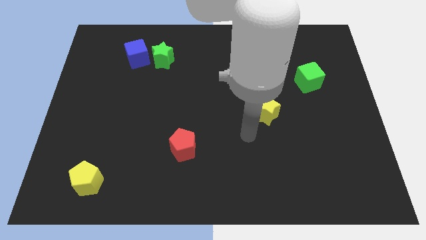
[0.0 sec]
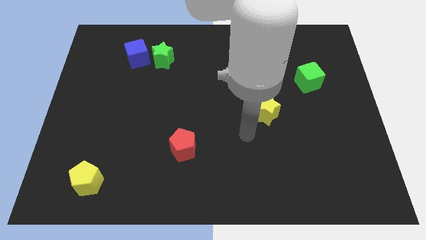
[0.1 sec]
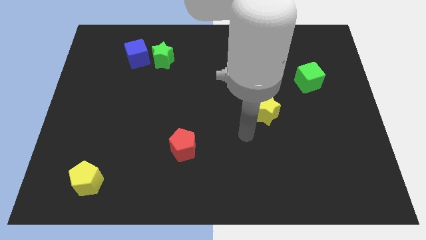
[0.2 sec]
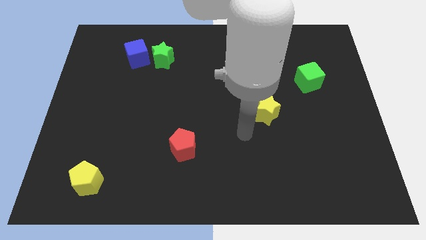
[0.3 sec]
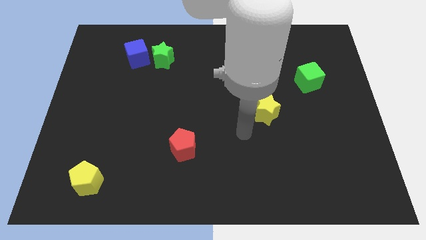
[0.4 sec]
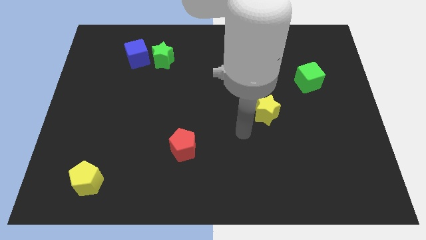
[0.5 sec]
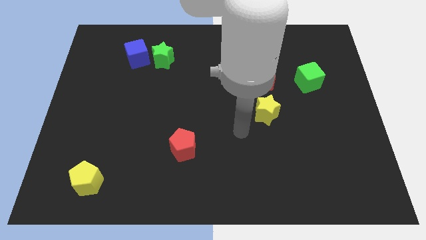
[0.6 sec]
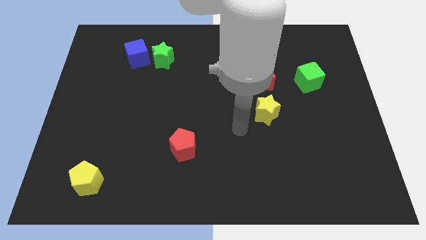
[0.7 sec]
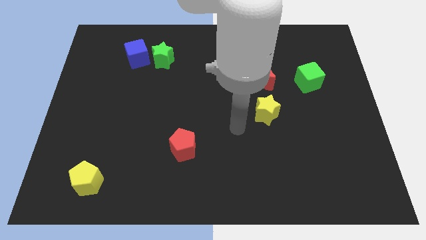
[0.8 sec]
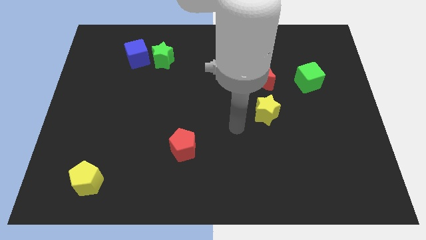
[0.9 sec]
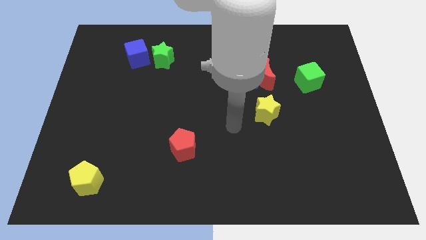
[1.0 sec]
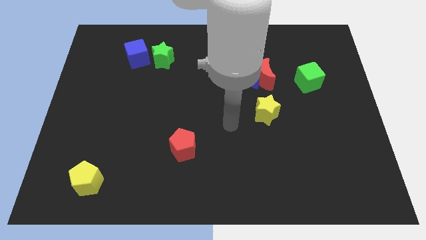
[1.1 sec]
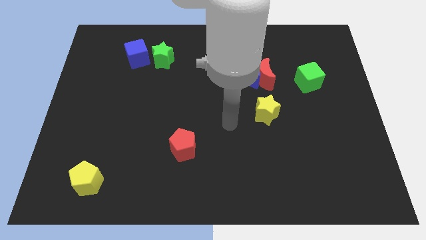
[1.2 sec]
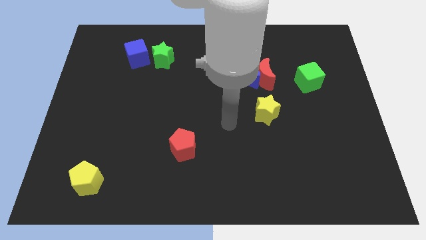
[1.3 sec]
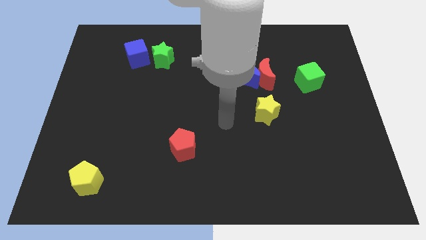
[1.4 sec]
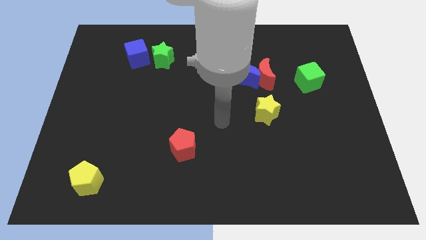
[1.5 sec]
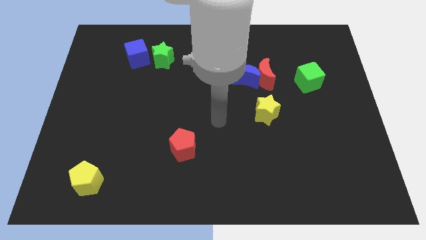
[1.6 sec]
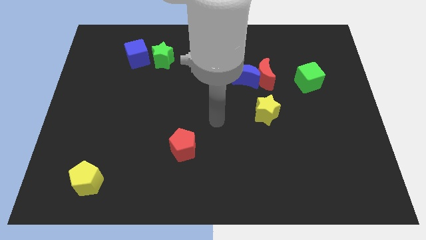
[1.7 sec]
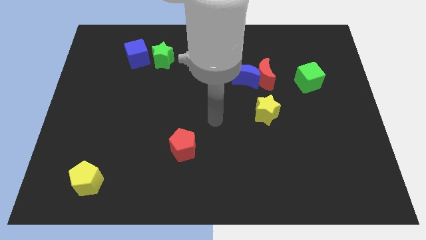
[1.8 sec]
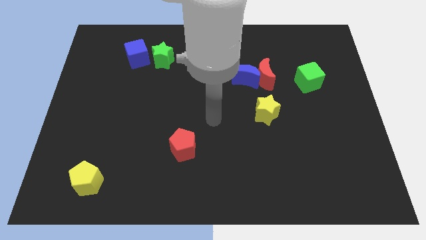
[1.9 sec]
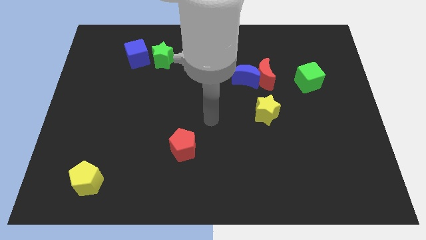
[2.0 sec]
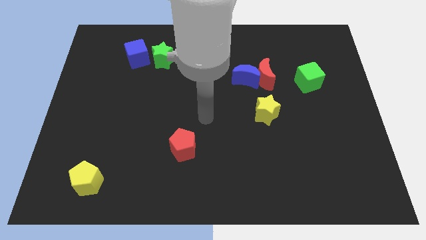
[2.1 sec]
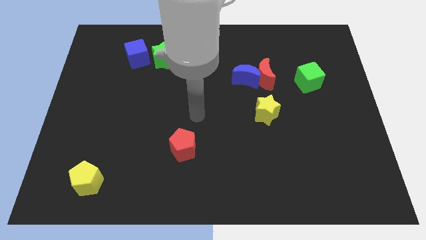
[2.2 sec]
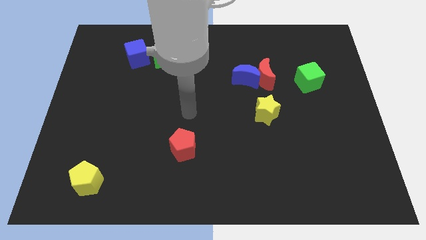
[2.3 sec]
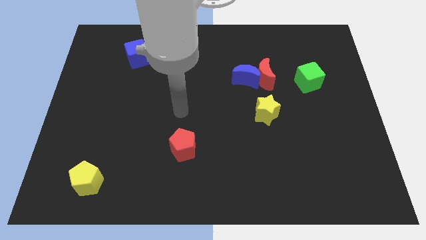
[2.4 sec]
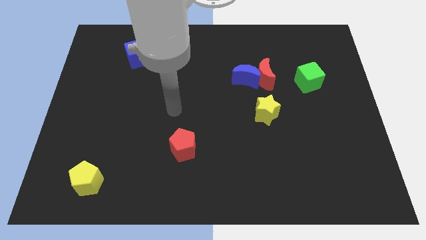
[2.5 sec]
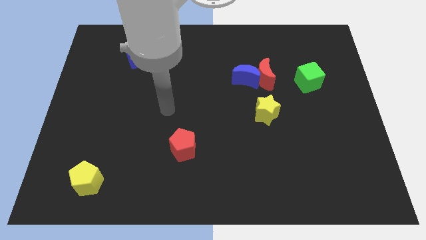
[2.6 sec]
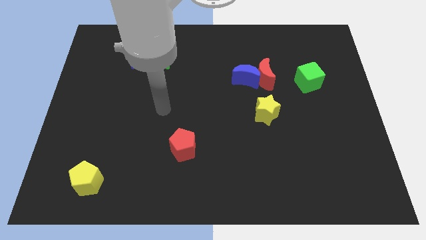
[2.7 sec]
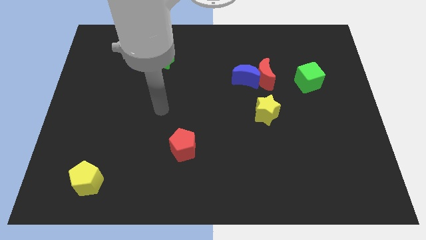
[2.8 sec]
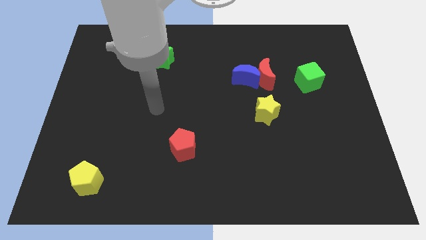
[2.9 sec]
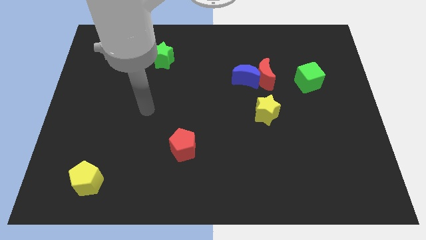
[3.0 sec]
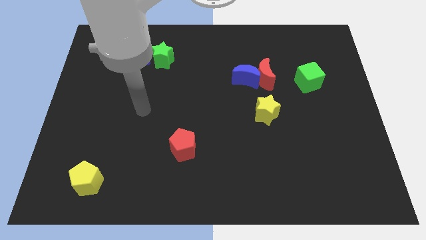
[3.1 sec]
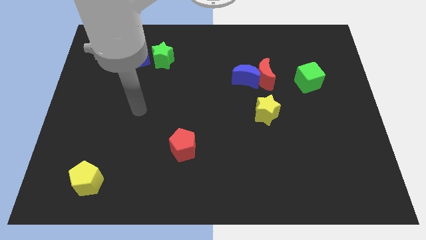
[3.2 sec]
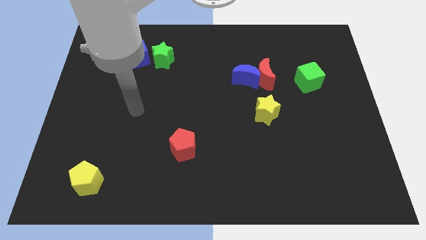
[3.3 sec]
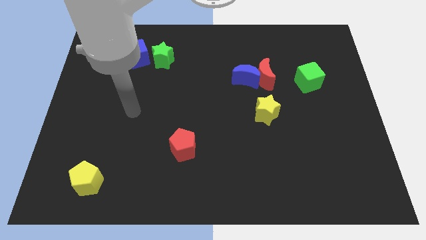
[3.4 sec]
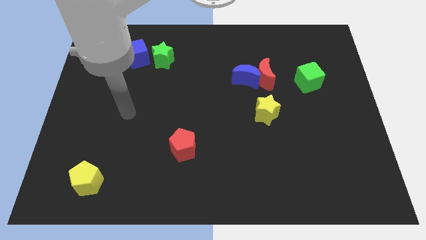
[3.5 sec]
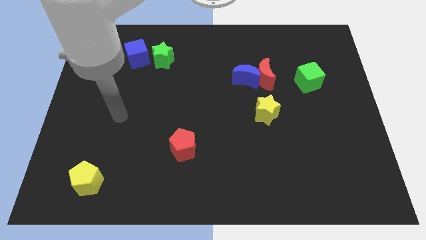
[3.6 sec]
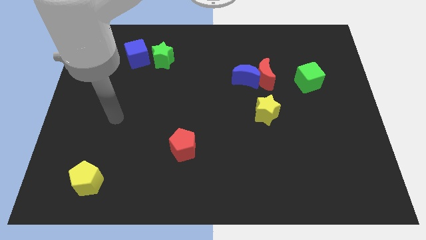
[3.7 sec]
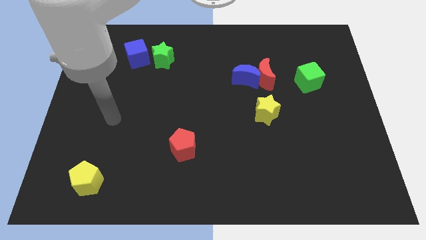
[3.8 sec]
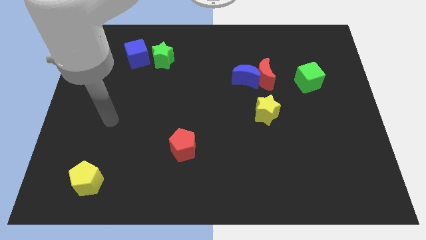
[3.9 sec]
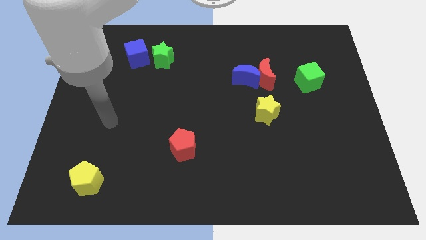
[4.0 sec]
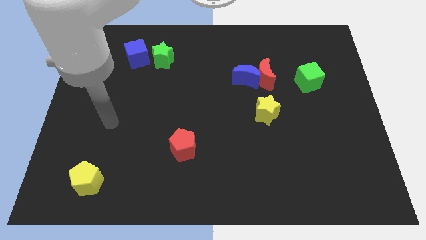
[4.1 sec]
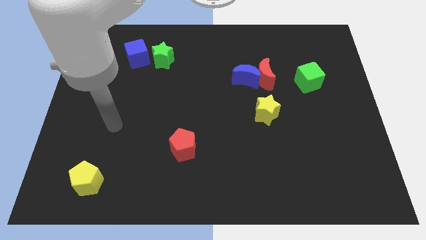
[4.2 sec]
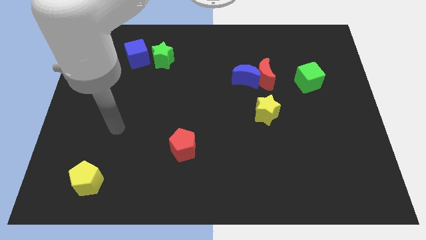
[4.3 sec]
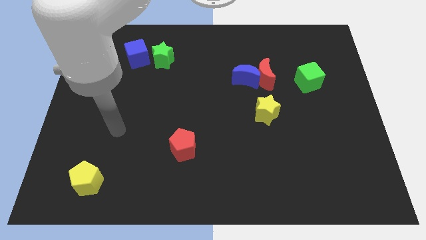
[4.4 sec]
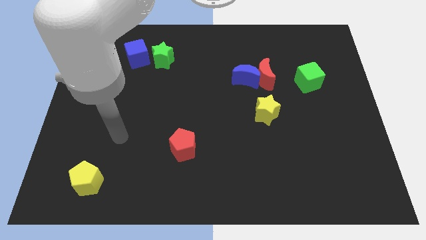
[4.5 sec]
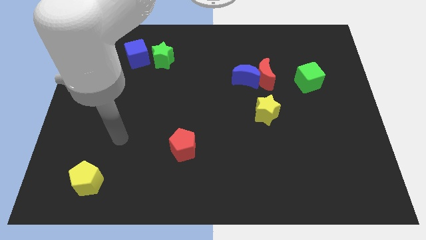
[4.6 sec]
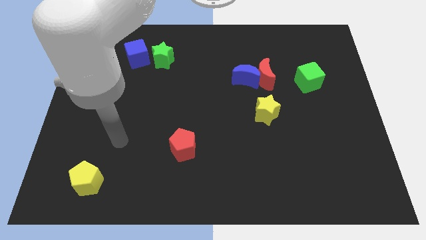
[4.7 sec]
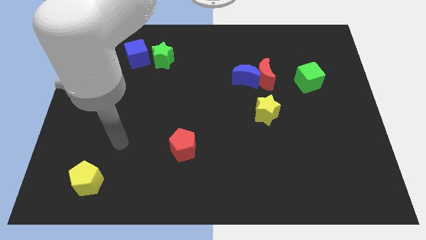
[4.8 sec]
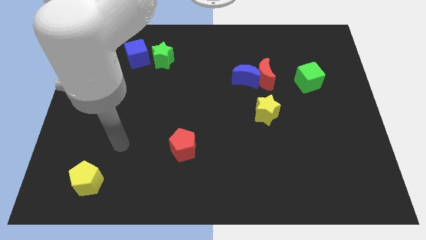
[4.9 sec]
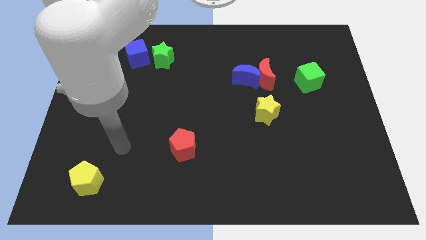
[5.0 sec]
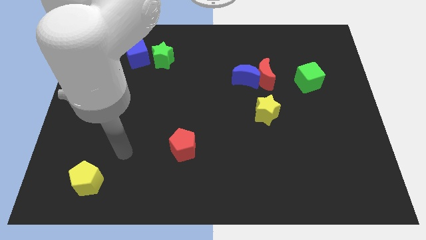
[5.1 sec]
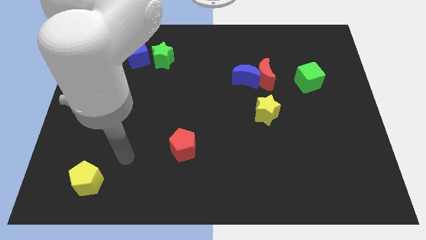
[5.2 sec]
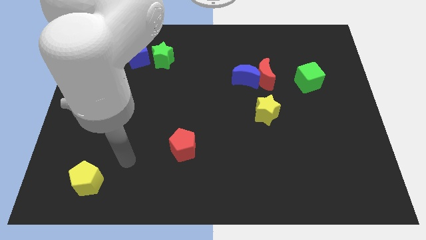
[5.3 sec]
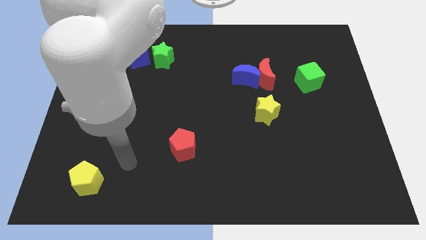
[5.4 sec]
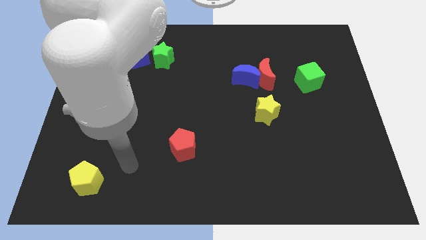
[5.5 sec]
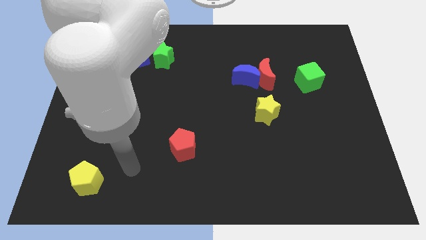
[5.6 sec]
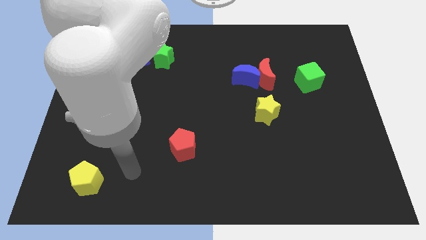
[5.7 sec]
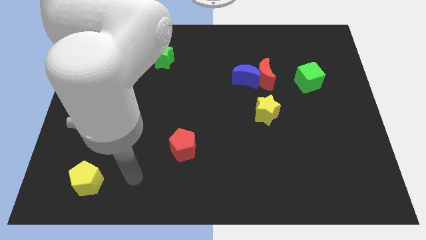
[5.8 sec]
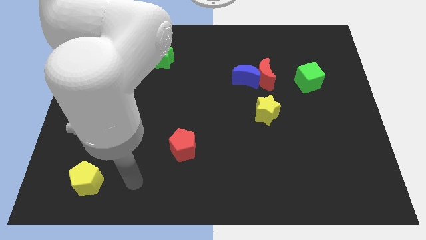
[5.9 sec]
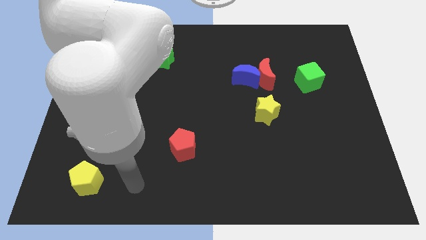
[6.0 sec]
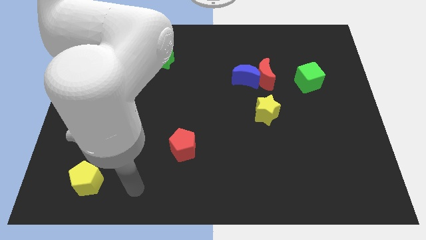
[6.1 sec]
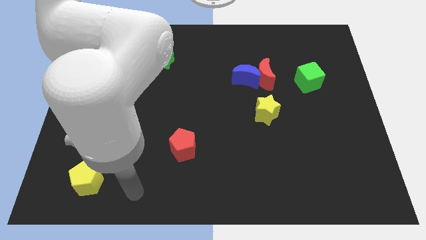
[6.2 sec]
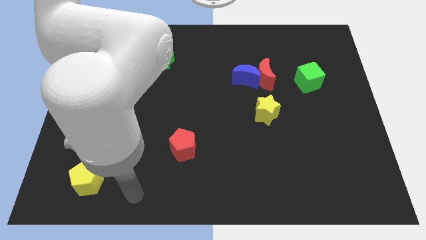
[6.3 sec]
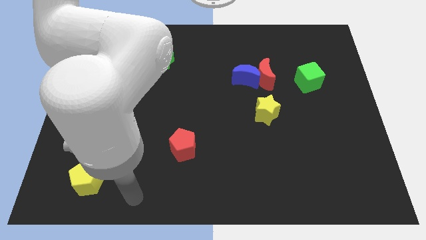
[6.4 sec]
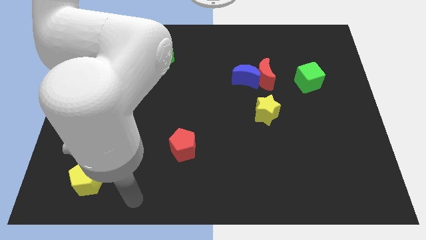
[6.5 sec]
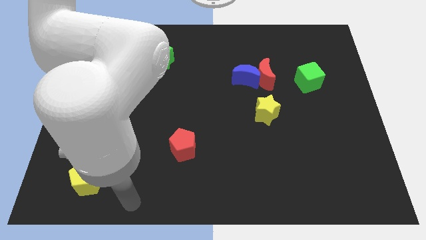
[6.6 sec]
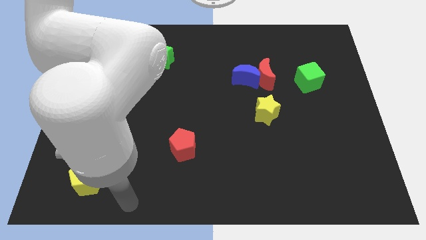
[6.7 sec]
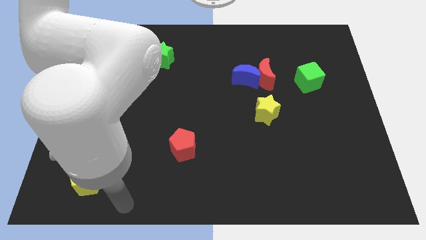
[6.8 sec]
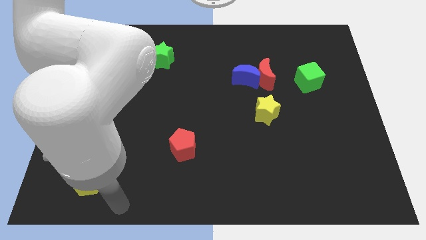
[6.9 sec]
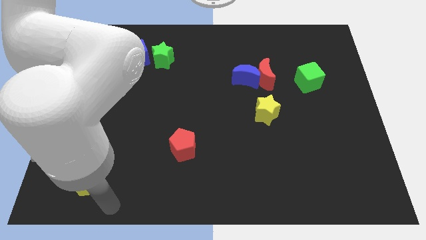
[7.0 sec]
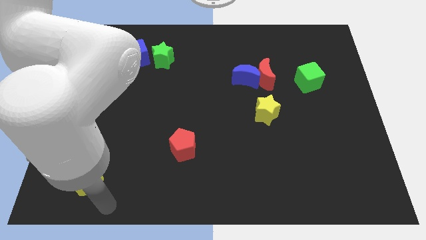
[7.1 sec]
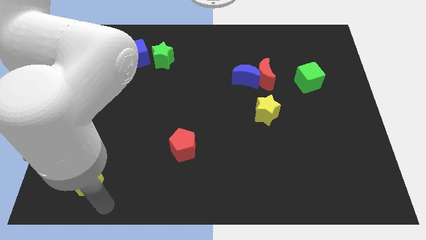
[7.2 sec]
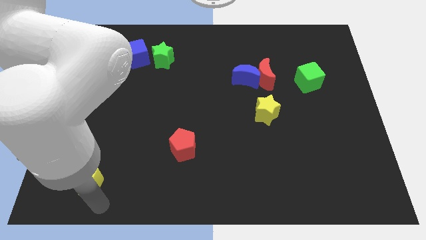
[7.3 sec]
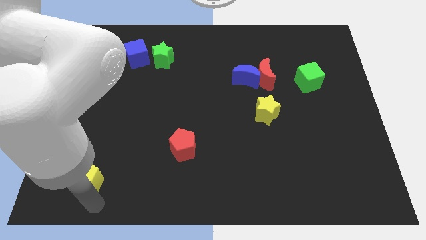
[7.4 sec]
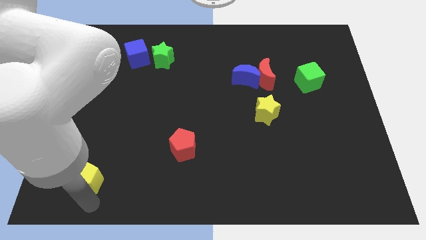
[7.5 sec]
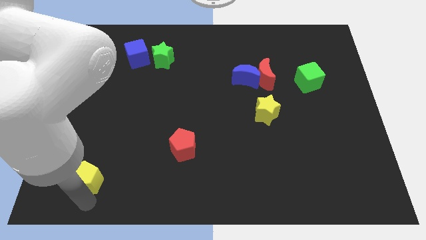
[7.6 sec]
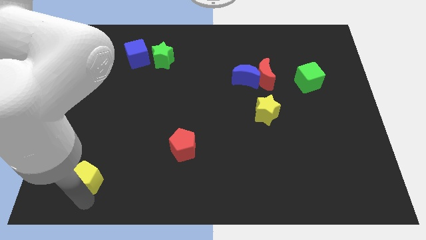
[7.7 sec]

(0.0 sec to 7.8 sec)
point the arm at the bottom side of the yellow pentagon

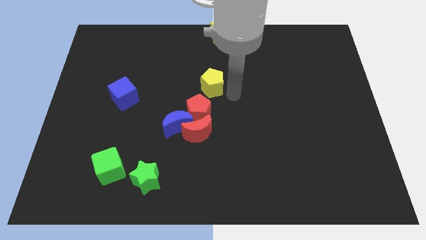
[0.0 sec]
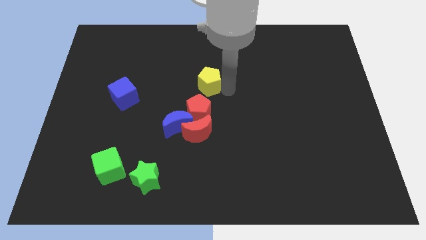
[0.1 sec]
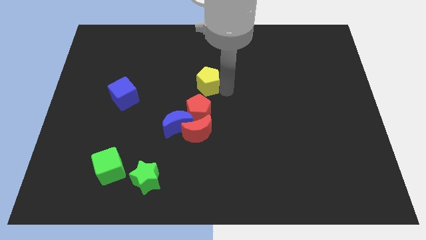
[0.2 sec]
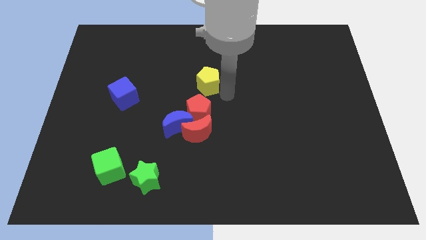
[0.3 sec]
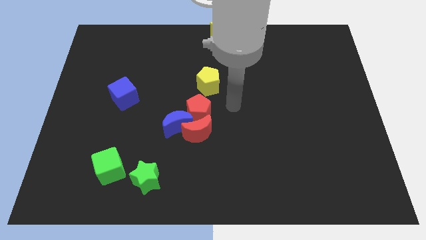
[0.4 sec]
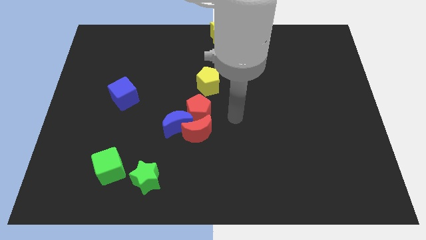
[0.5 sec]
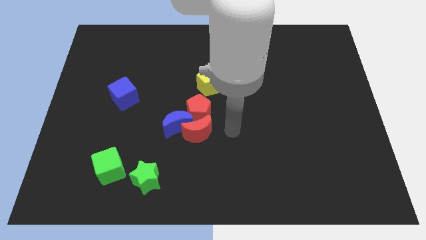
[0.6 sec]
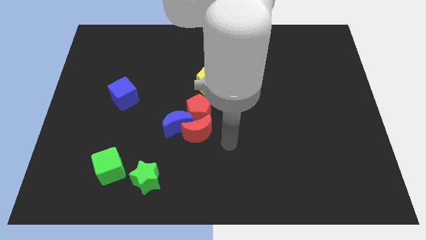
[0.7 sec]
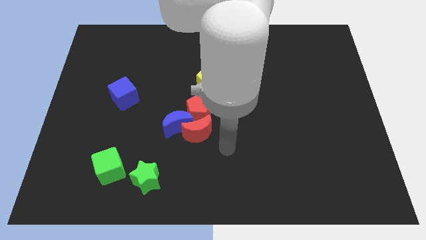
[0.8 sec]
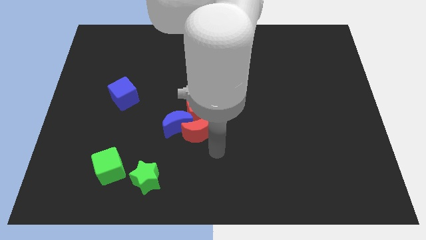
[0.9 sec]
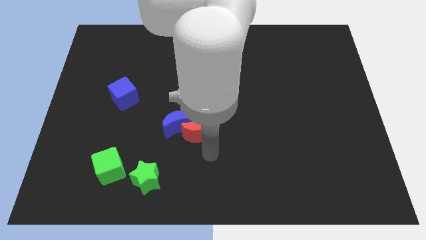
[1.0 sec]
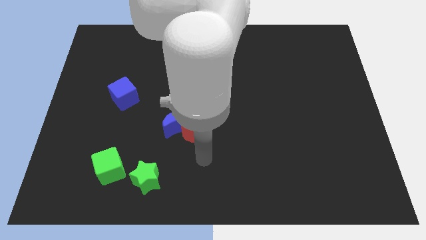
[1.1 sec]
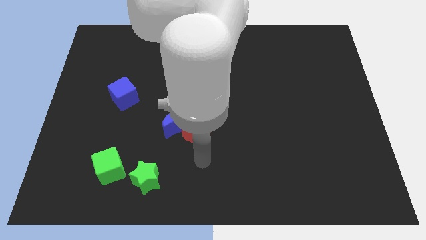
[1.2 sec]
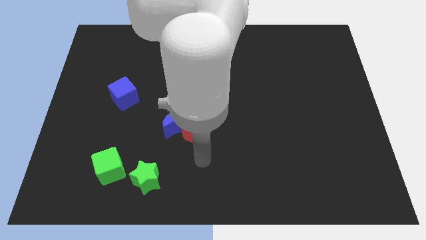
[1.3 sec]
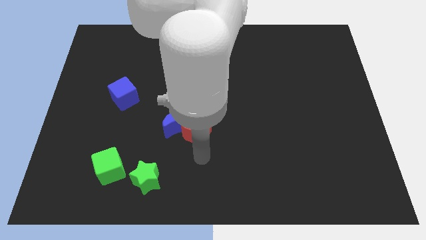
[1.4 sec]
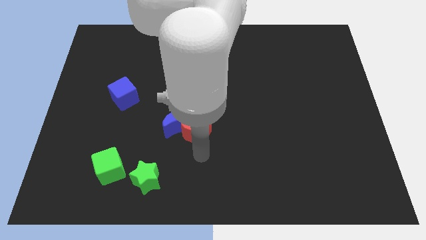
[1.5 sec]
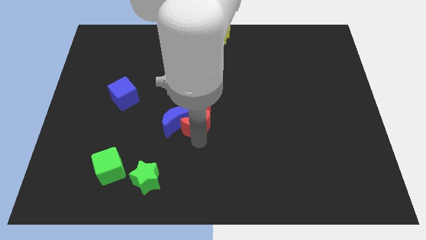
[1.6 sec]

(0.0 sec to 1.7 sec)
move your hand below the red crescent
